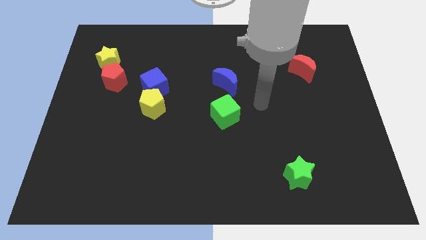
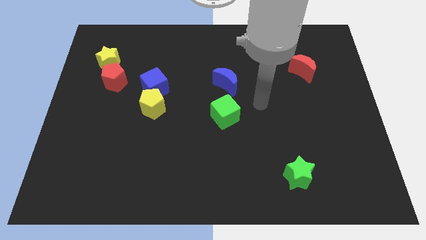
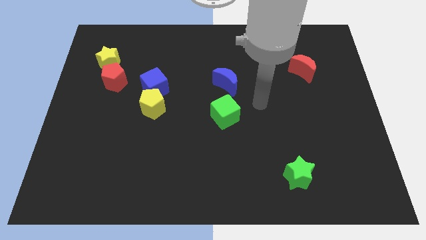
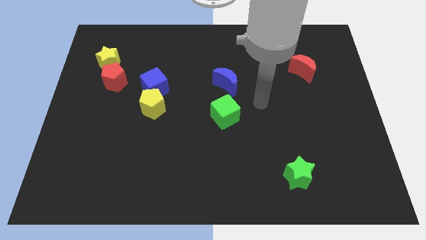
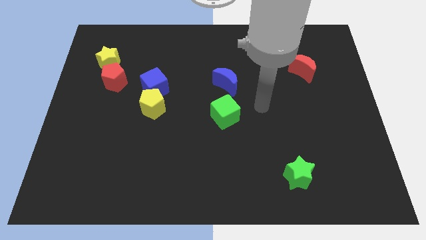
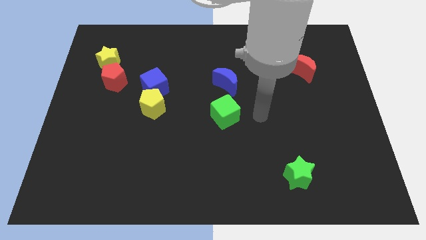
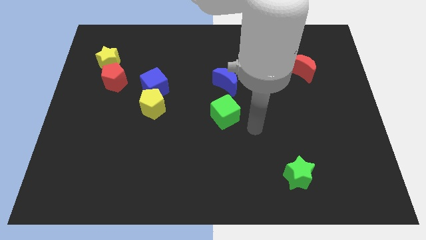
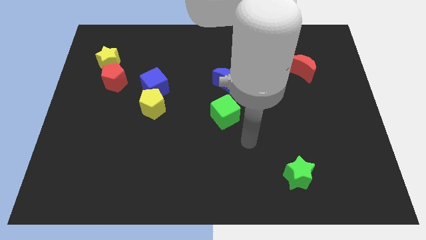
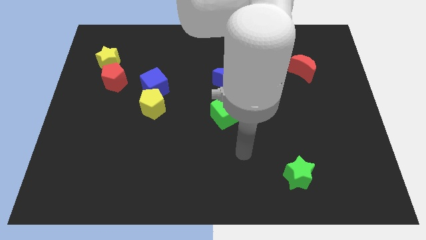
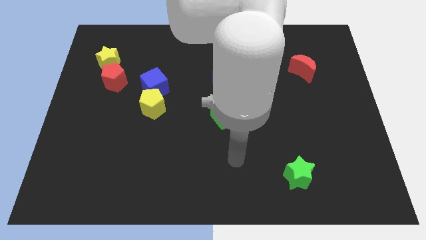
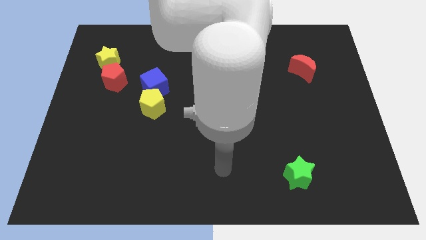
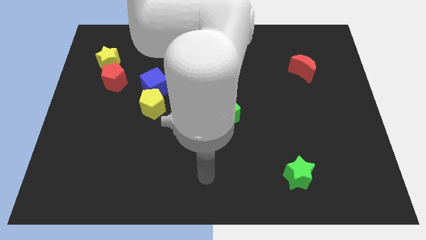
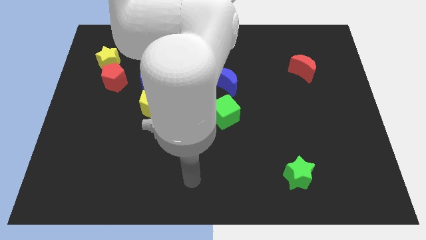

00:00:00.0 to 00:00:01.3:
move your hand to the bottom center

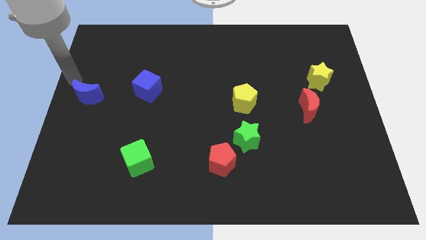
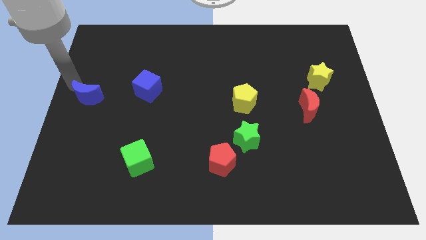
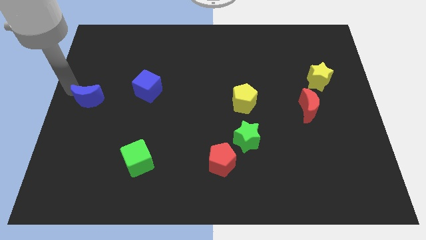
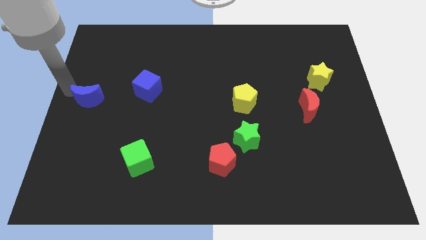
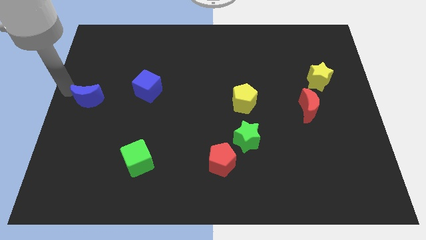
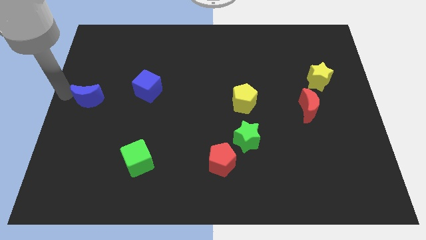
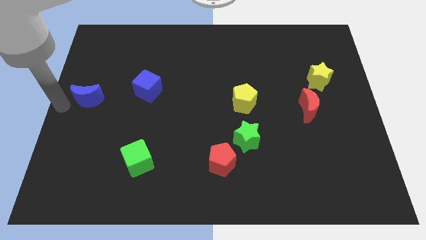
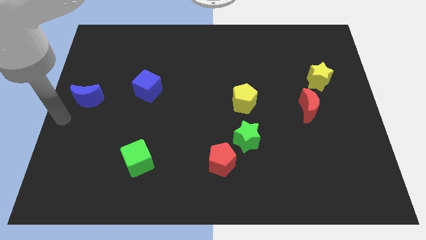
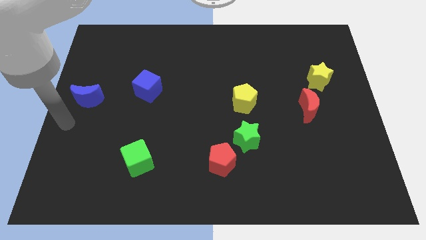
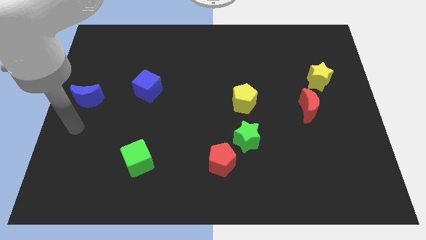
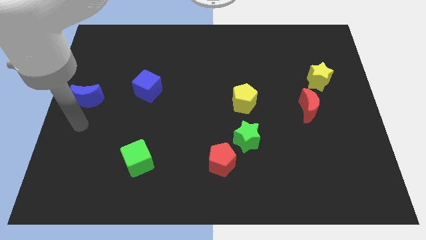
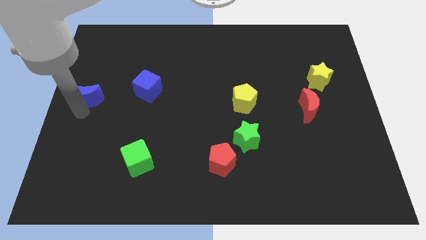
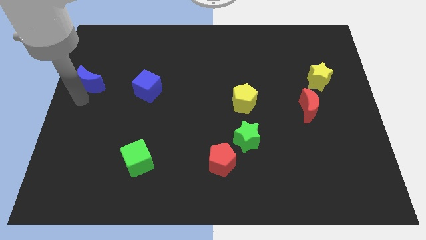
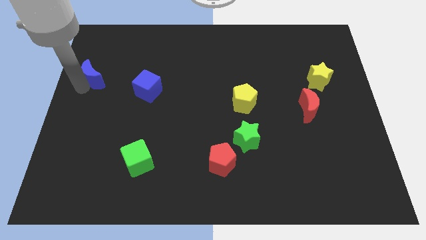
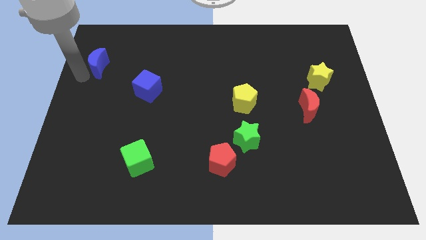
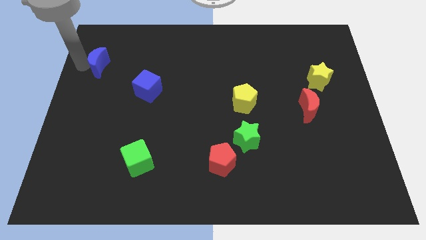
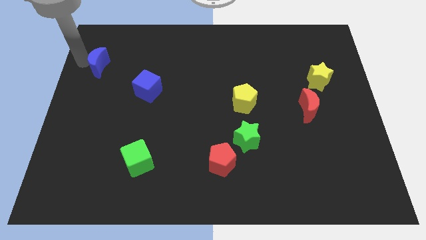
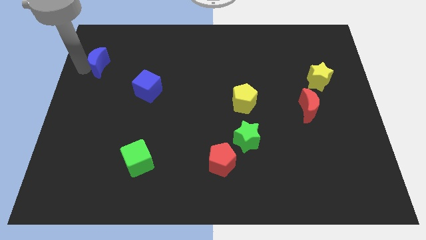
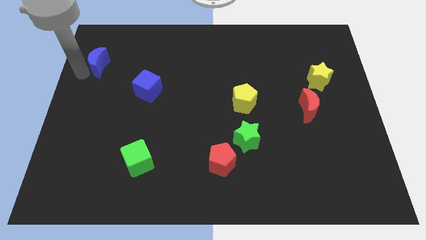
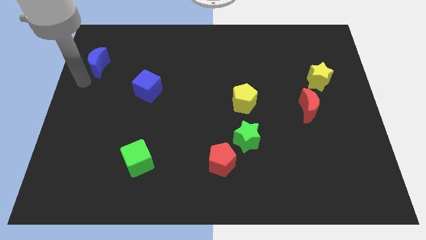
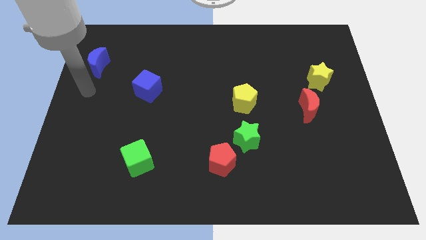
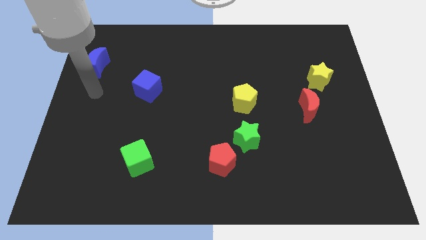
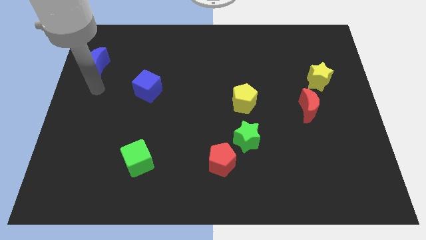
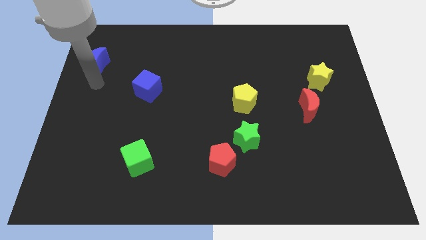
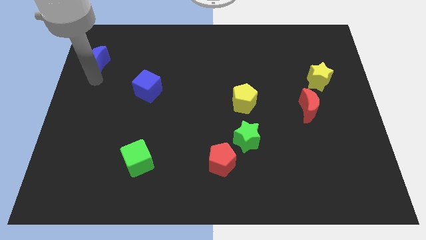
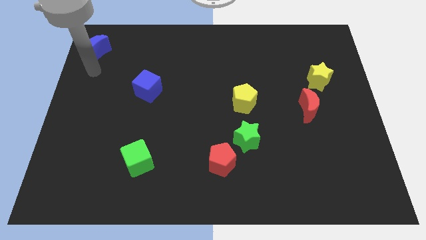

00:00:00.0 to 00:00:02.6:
move the blue crescent to the top left of the blue cube

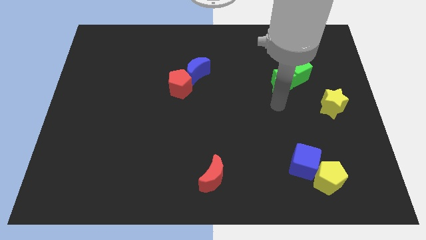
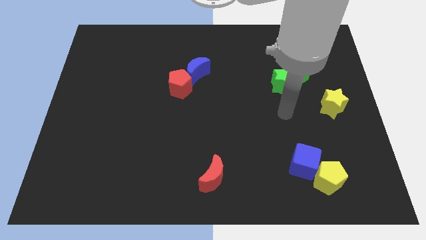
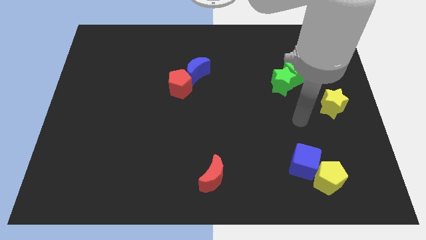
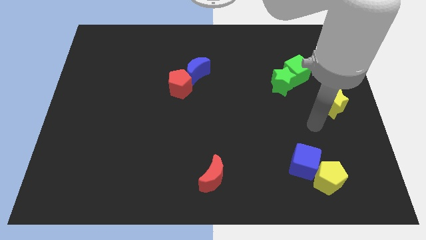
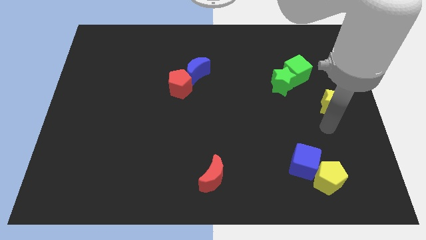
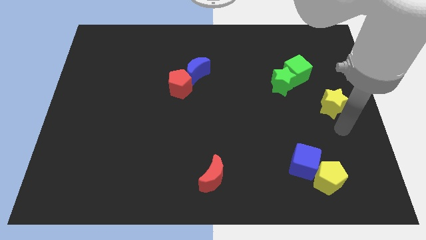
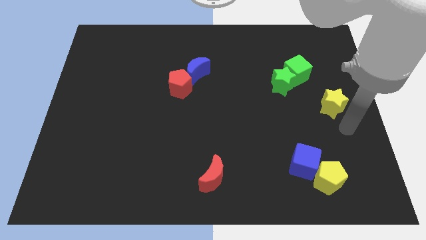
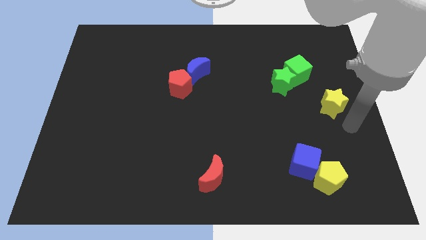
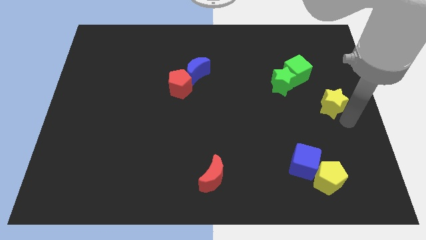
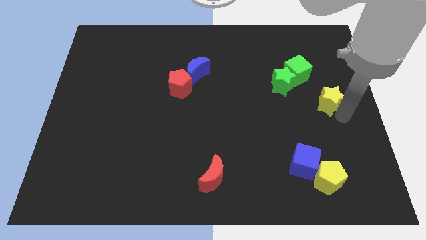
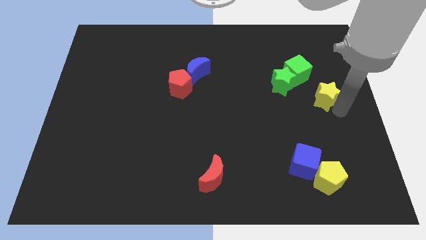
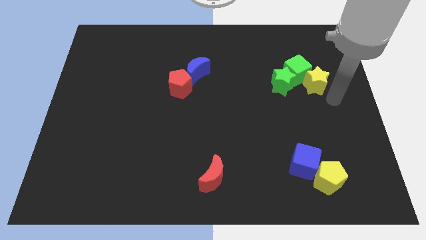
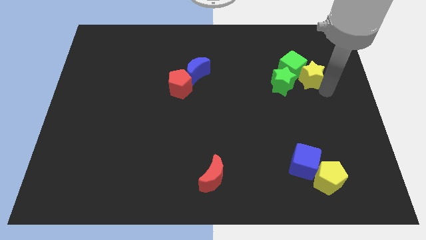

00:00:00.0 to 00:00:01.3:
push the yellow star into the green cube

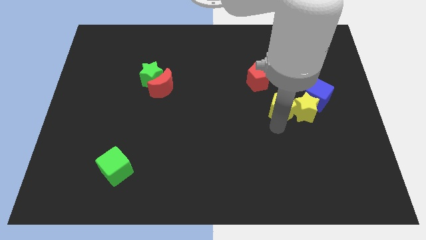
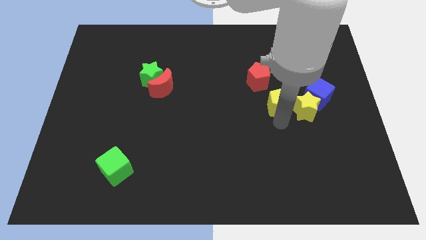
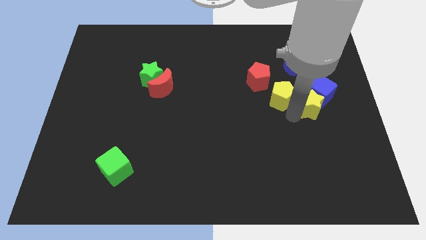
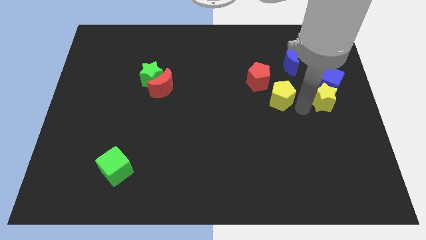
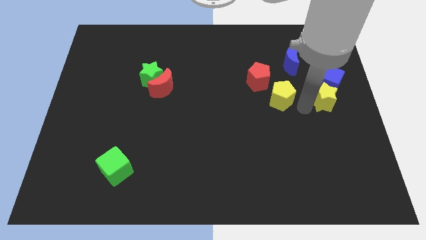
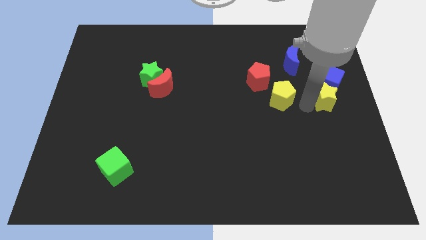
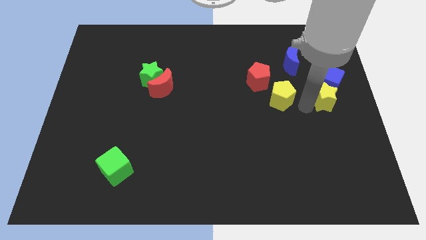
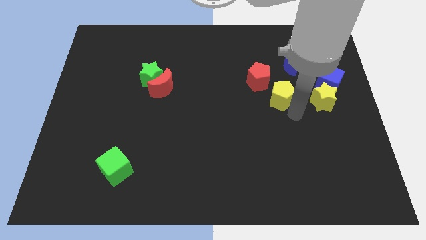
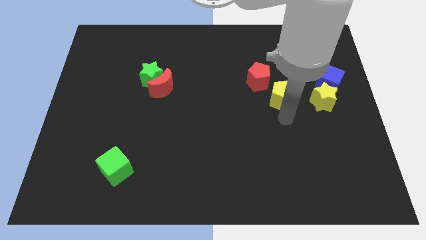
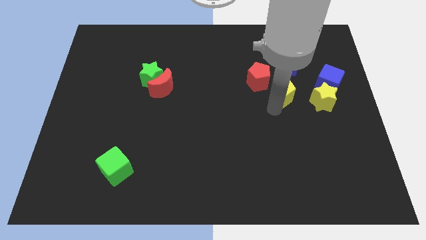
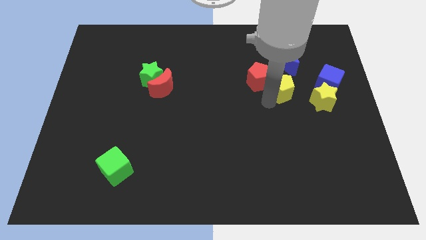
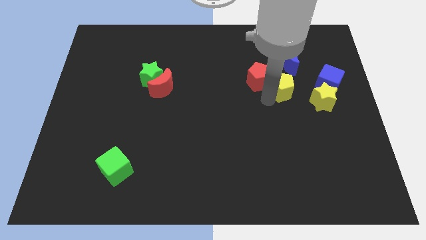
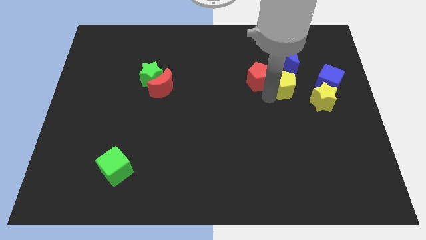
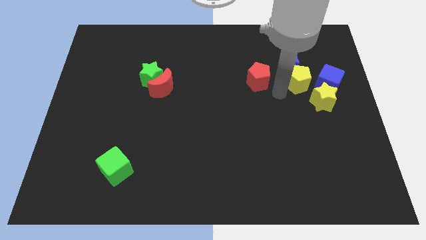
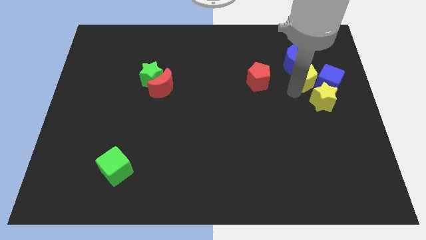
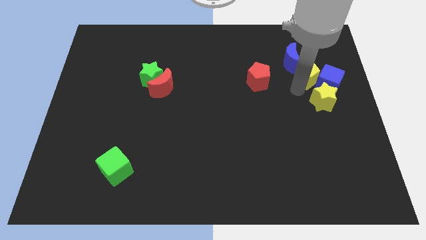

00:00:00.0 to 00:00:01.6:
push the blue cube with the help of yellow star

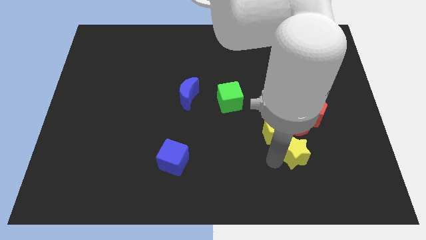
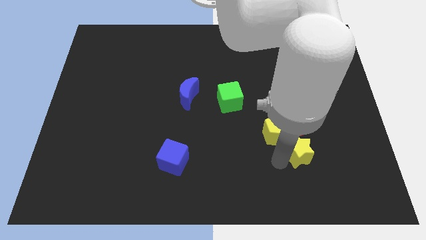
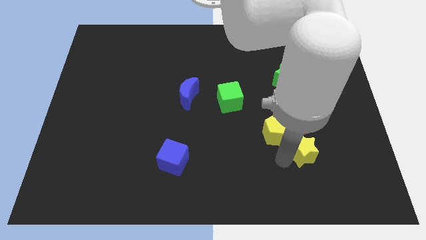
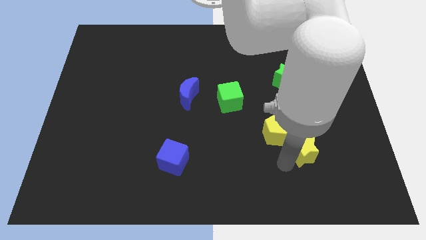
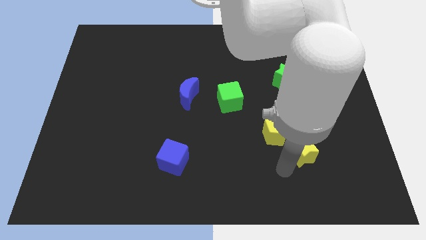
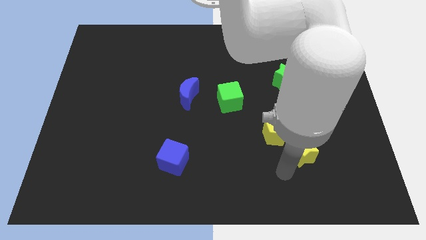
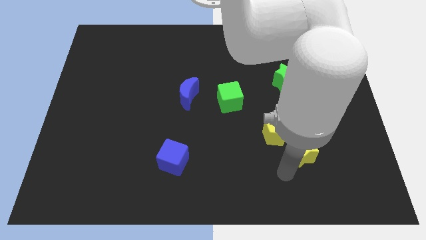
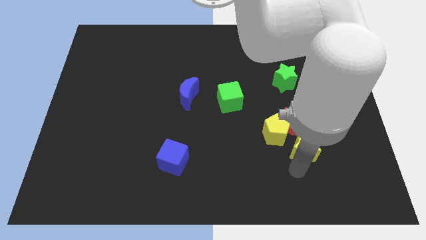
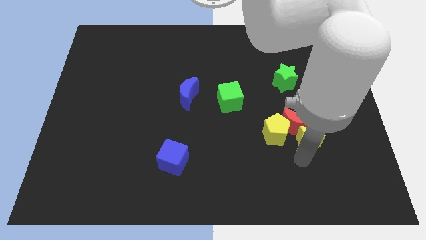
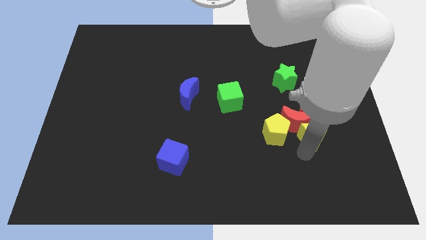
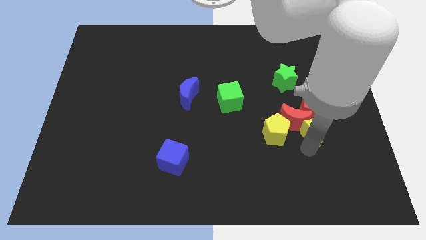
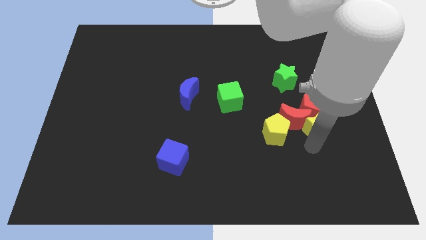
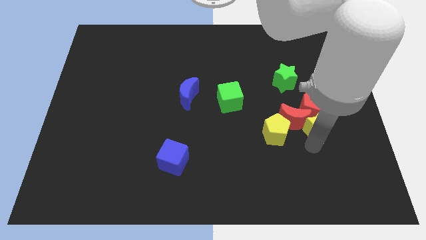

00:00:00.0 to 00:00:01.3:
place the yellow star parallel right to the yellow pentagon

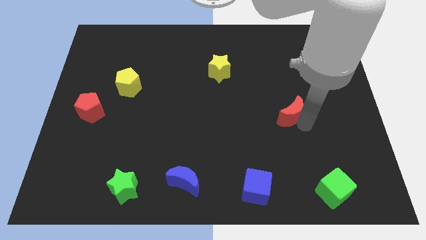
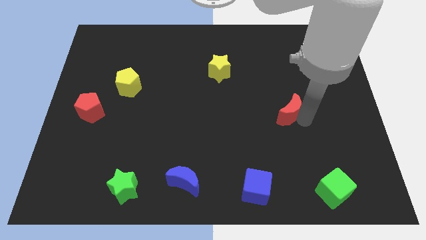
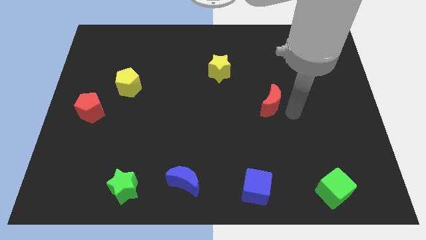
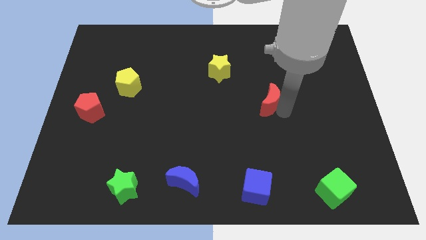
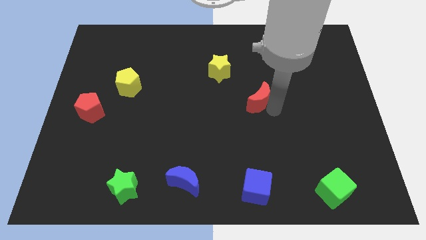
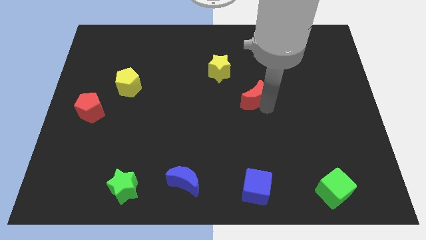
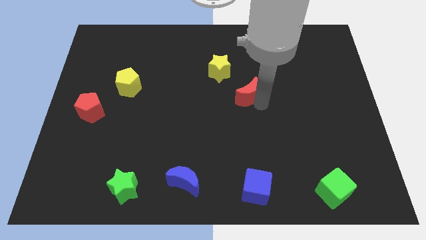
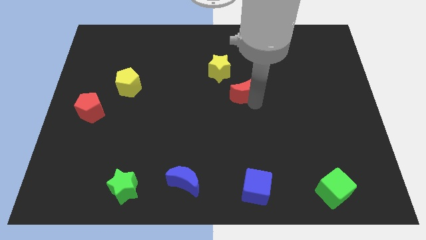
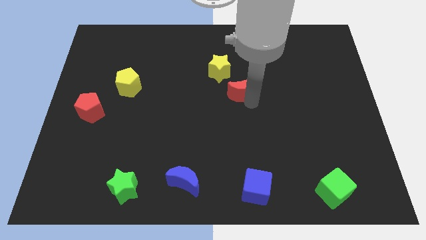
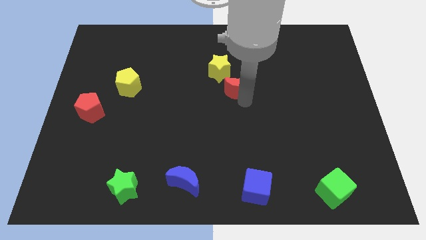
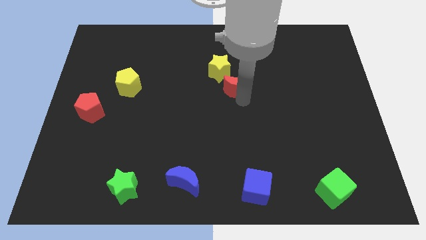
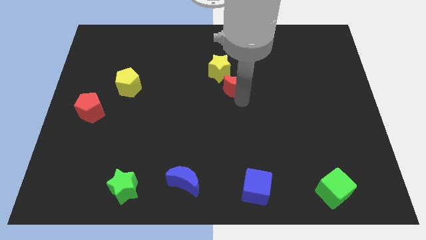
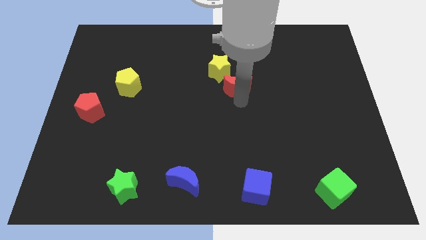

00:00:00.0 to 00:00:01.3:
move the red crescent towards yellow star
